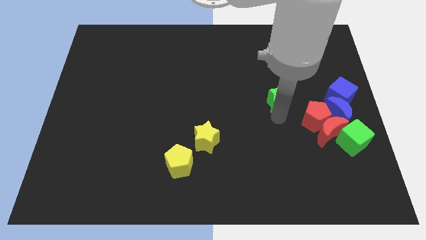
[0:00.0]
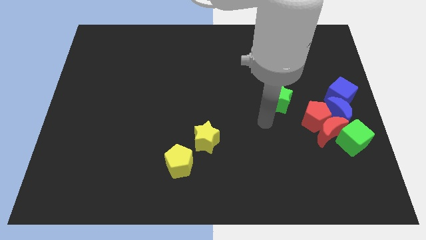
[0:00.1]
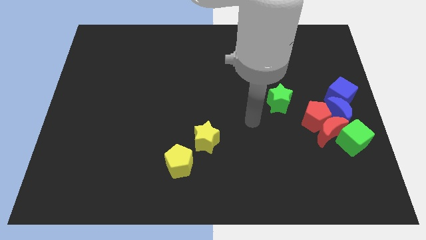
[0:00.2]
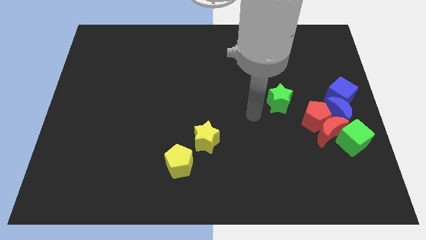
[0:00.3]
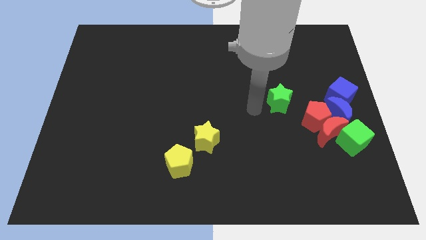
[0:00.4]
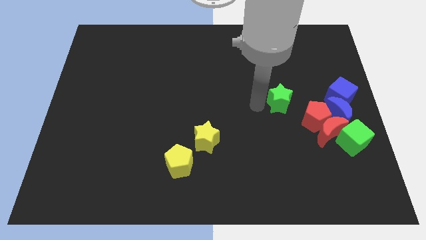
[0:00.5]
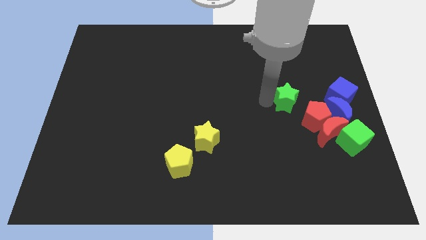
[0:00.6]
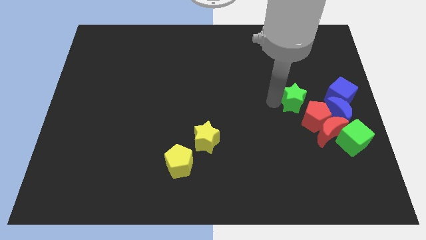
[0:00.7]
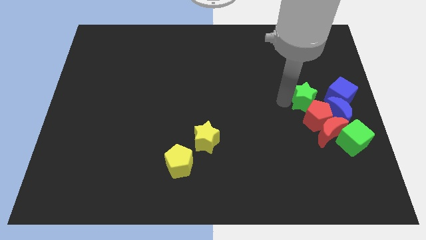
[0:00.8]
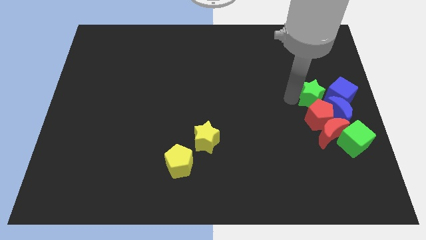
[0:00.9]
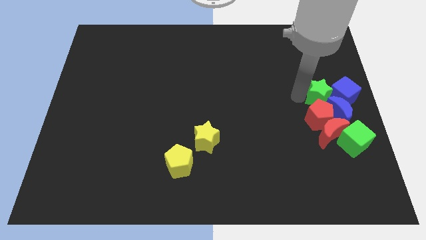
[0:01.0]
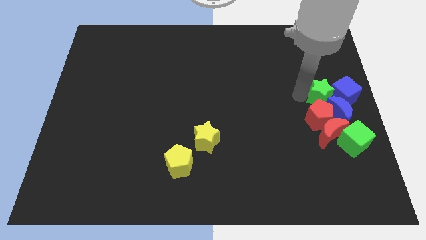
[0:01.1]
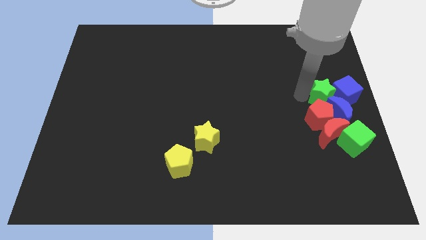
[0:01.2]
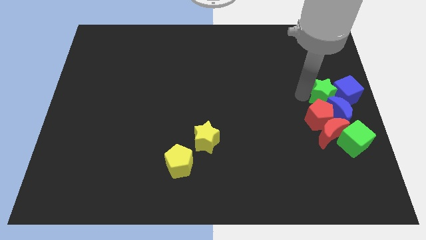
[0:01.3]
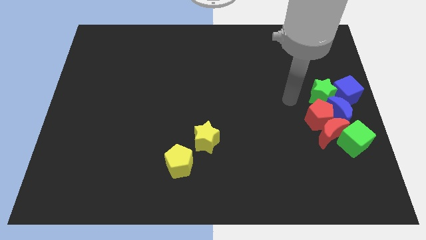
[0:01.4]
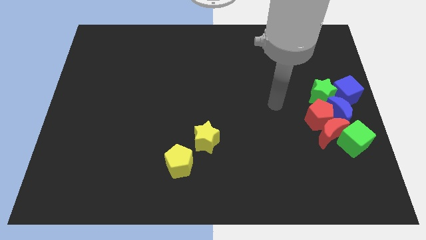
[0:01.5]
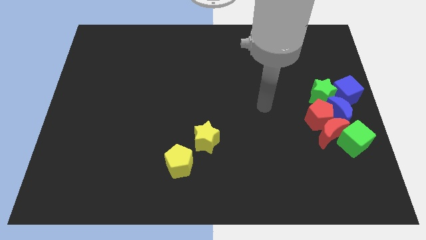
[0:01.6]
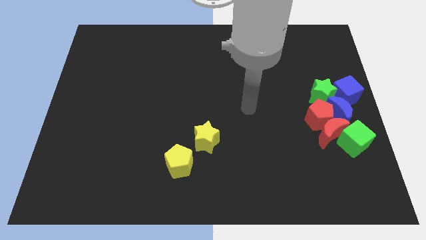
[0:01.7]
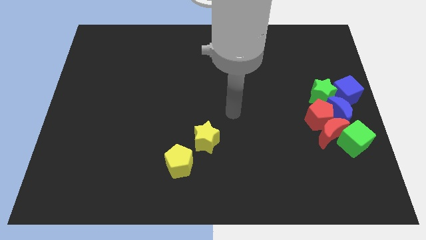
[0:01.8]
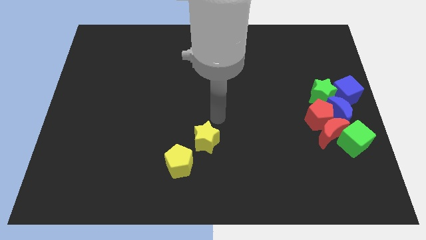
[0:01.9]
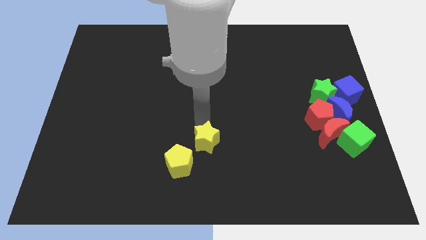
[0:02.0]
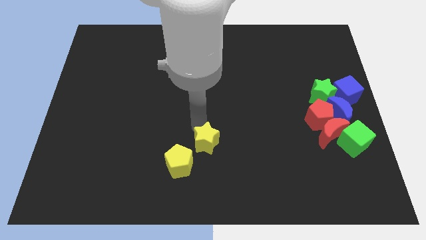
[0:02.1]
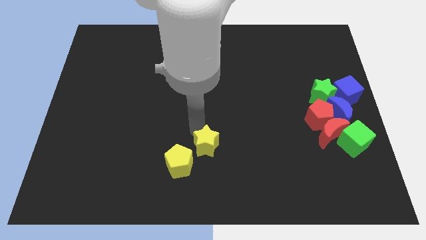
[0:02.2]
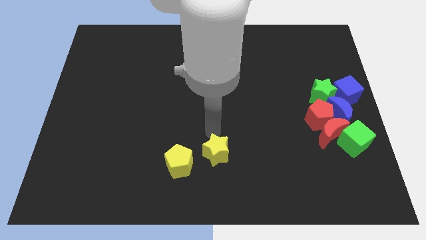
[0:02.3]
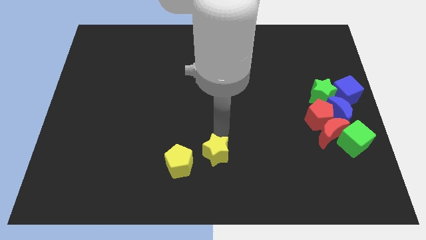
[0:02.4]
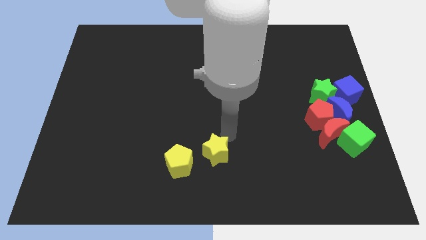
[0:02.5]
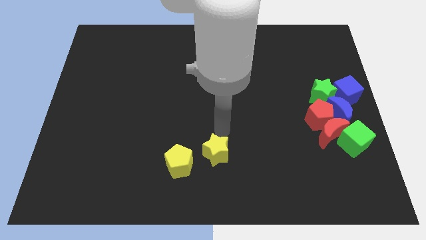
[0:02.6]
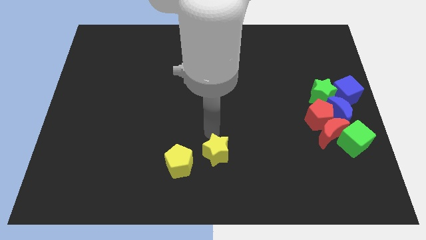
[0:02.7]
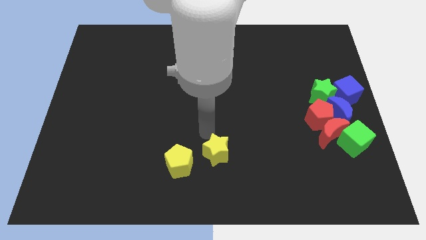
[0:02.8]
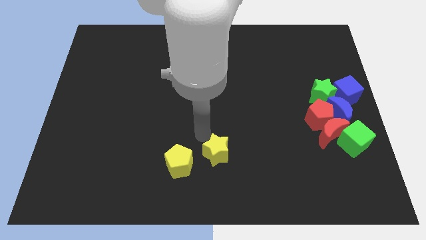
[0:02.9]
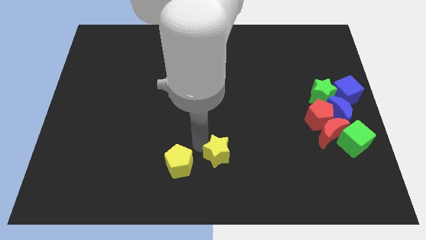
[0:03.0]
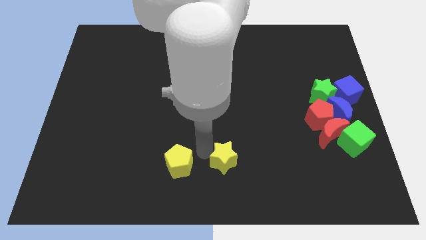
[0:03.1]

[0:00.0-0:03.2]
push the yellow star to the right of the yellow pentagon

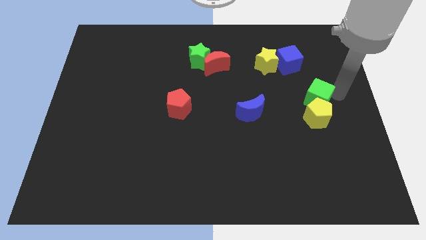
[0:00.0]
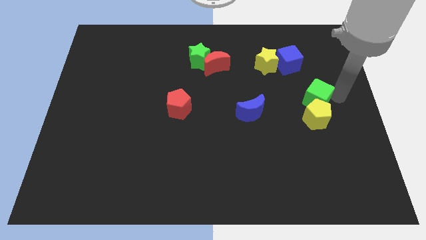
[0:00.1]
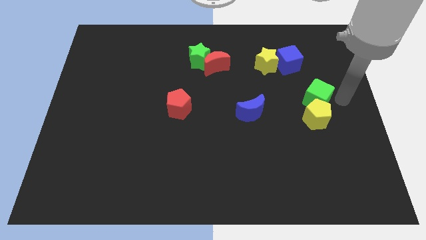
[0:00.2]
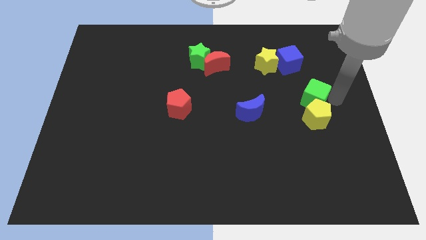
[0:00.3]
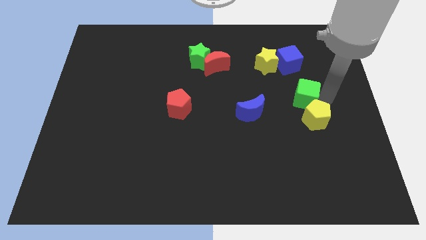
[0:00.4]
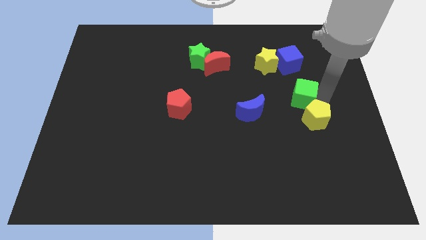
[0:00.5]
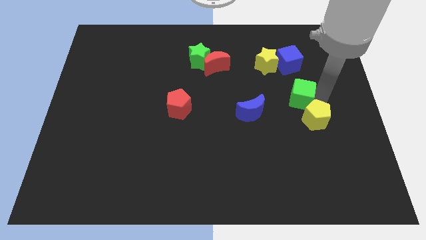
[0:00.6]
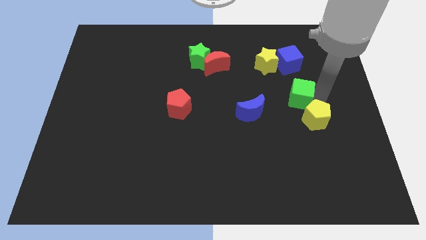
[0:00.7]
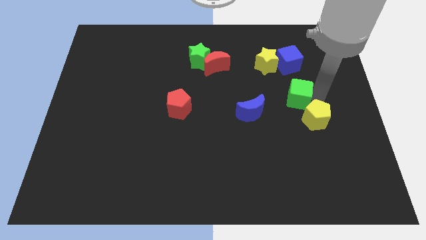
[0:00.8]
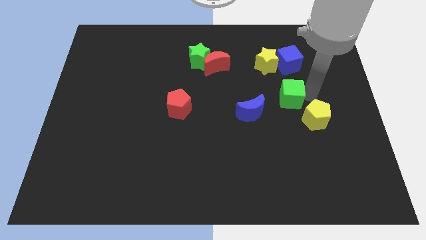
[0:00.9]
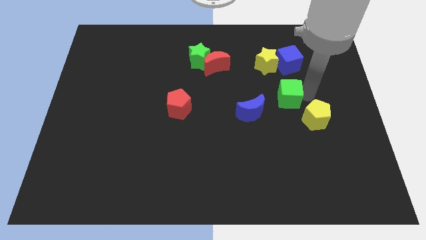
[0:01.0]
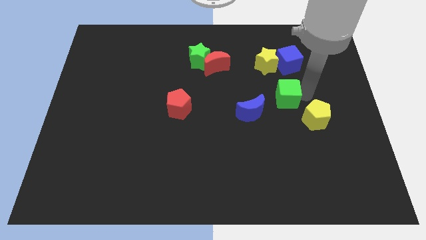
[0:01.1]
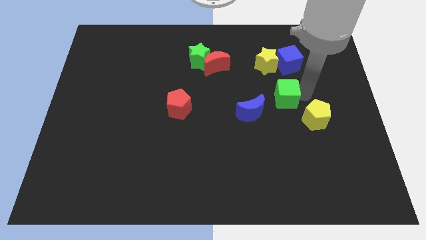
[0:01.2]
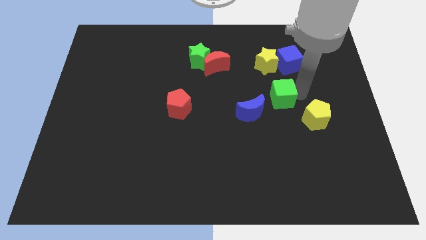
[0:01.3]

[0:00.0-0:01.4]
place green cube to the top right of yellow pentagon

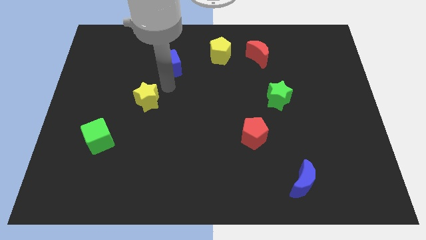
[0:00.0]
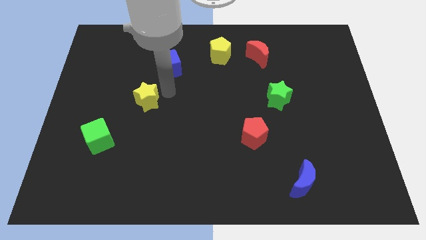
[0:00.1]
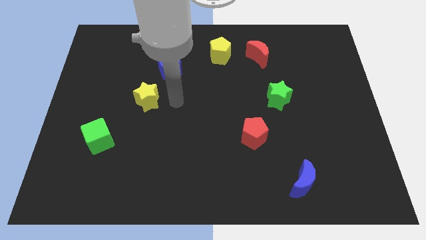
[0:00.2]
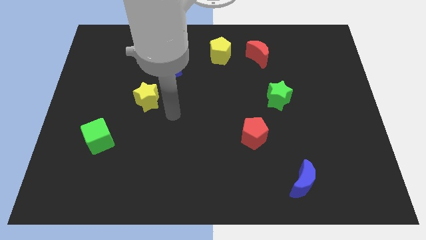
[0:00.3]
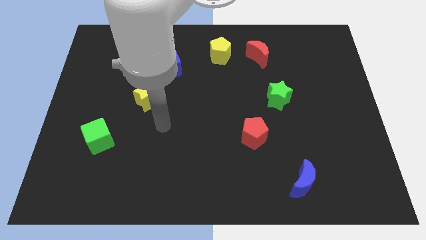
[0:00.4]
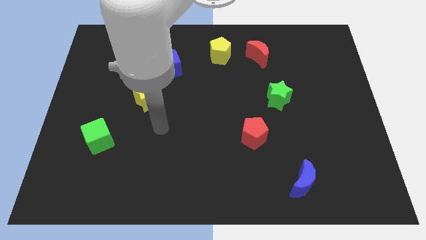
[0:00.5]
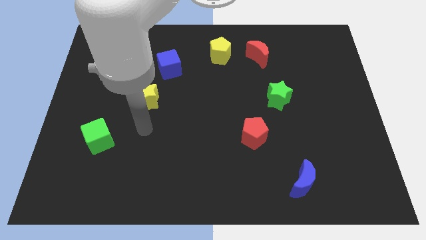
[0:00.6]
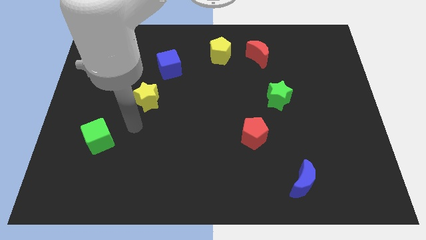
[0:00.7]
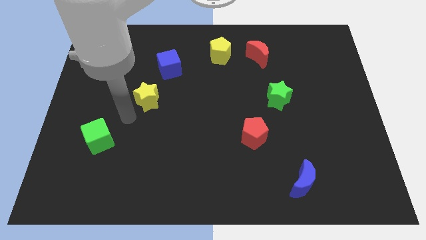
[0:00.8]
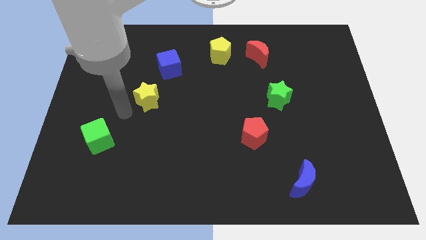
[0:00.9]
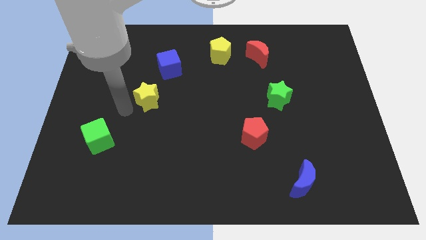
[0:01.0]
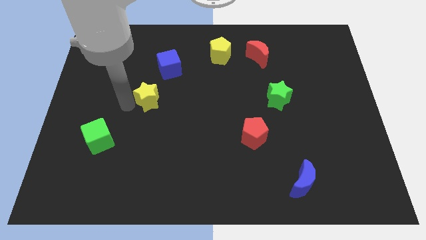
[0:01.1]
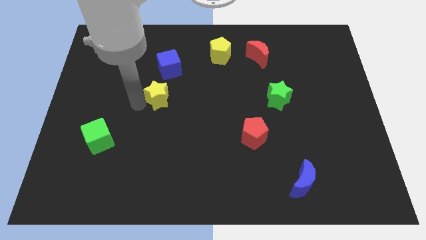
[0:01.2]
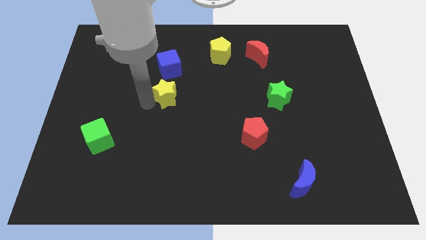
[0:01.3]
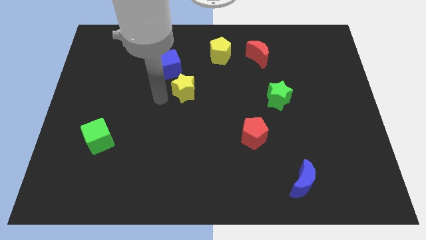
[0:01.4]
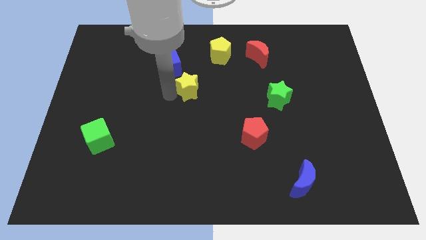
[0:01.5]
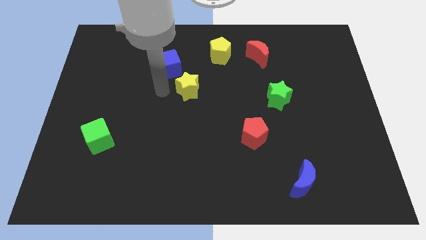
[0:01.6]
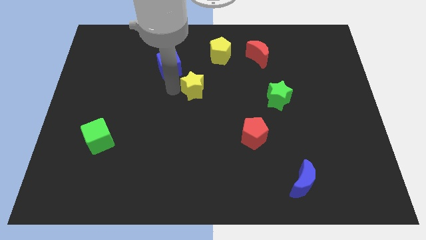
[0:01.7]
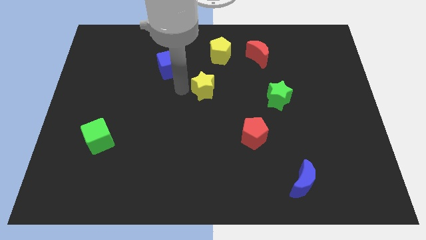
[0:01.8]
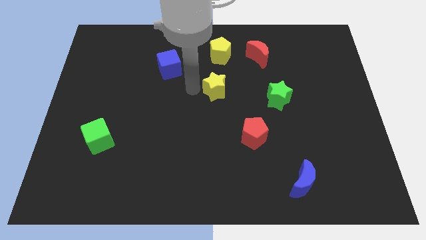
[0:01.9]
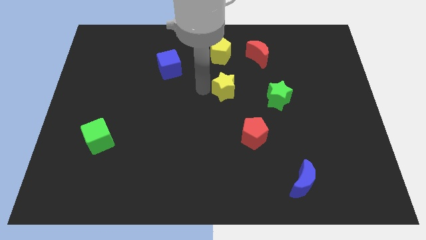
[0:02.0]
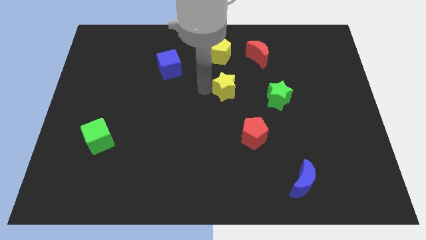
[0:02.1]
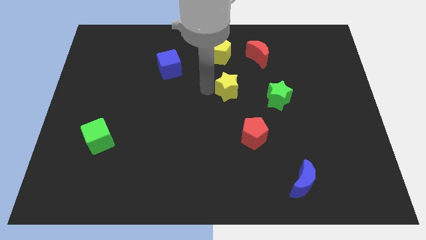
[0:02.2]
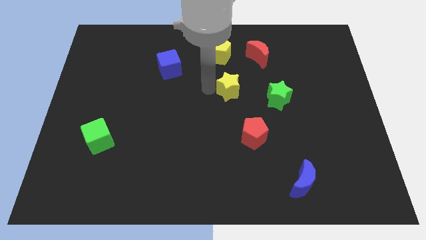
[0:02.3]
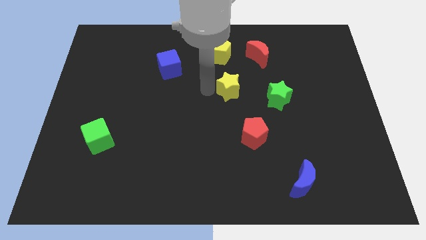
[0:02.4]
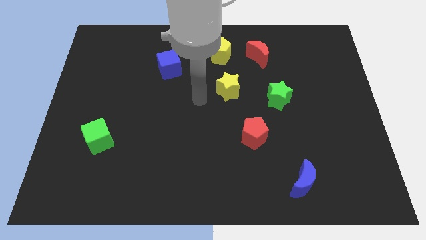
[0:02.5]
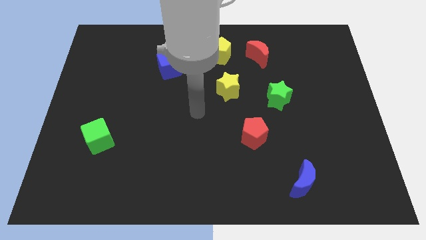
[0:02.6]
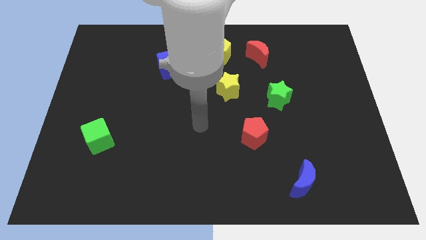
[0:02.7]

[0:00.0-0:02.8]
move the yellow star towards the left of the green star

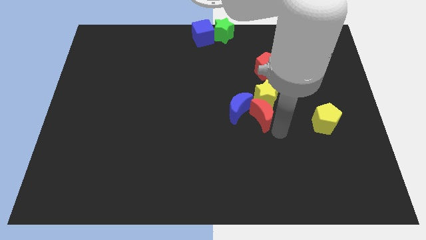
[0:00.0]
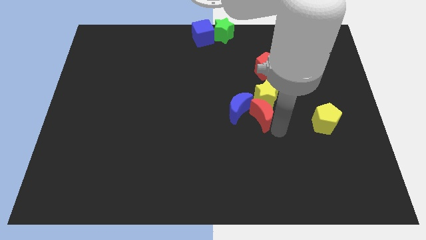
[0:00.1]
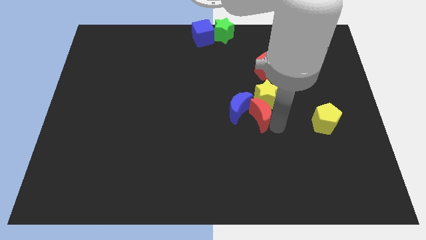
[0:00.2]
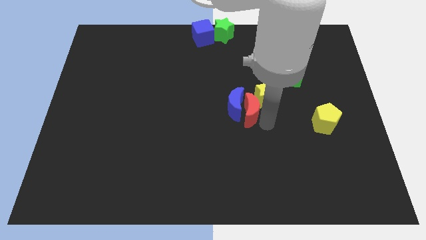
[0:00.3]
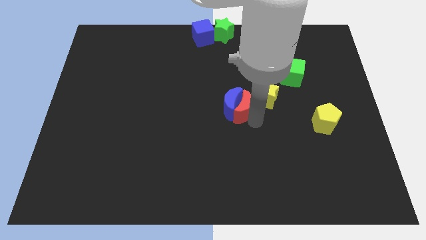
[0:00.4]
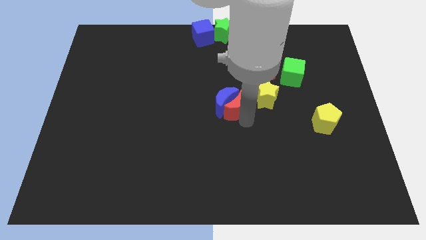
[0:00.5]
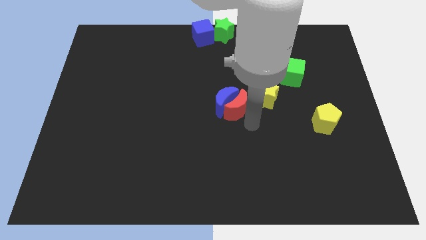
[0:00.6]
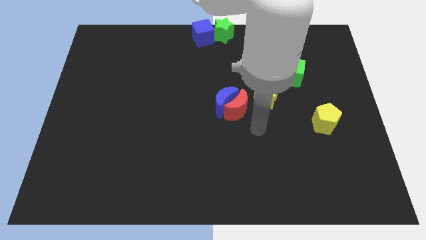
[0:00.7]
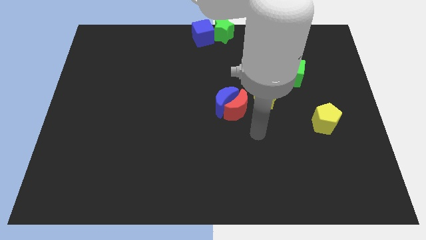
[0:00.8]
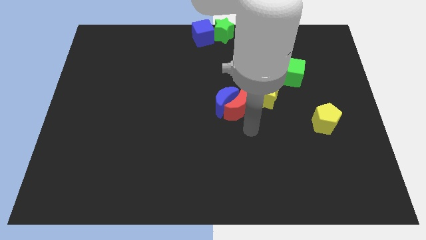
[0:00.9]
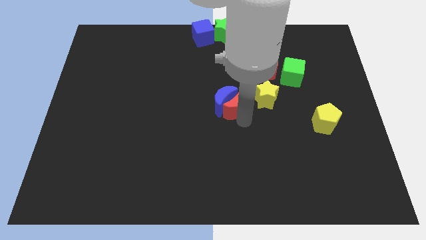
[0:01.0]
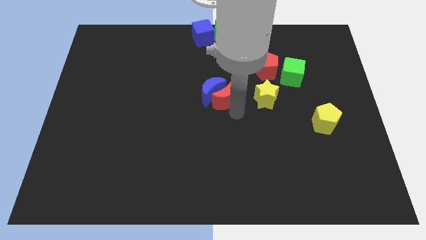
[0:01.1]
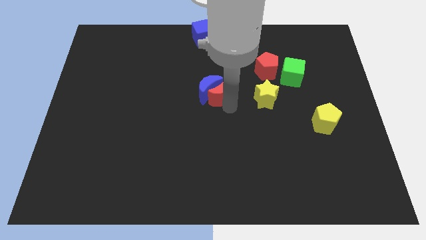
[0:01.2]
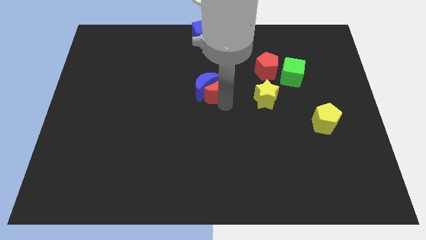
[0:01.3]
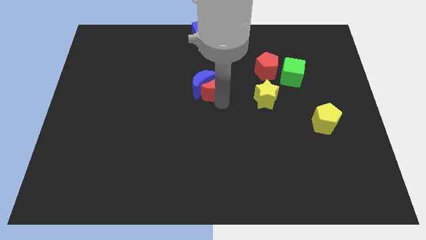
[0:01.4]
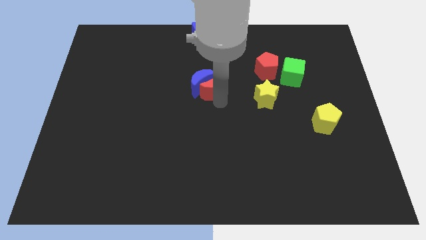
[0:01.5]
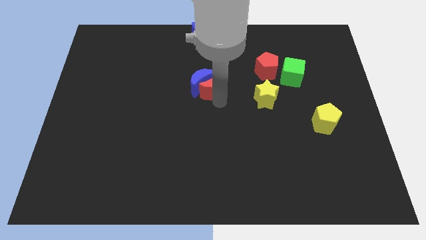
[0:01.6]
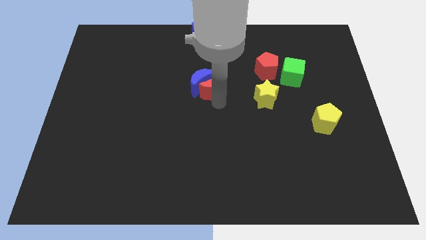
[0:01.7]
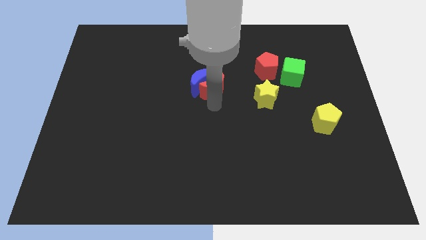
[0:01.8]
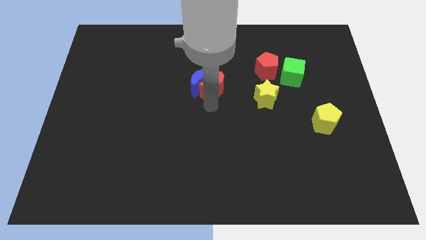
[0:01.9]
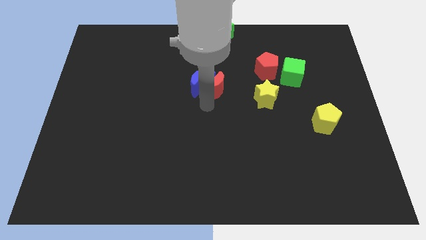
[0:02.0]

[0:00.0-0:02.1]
move both the crescents upwards
